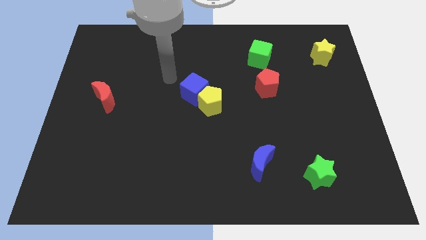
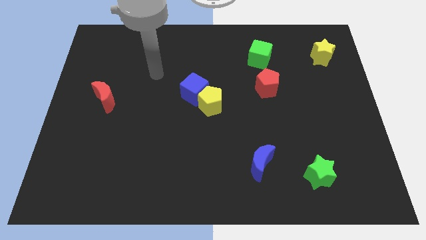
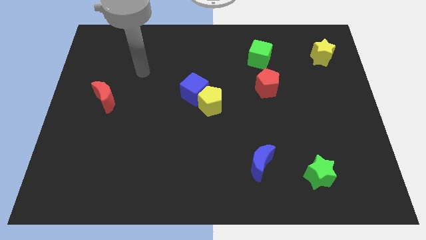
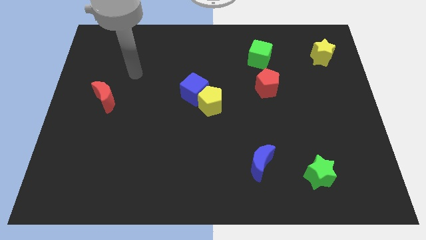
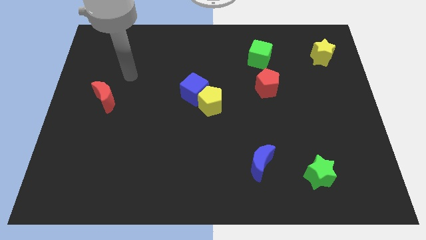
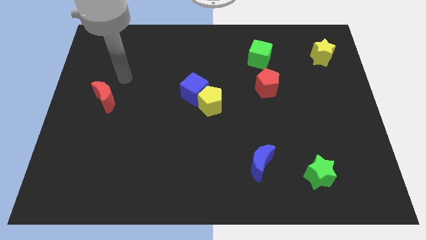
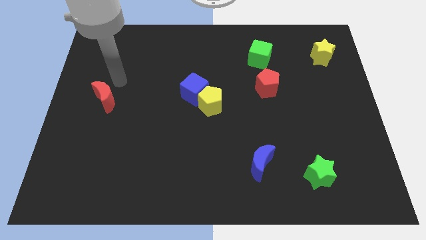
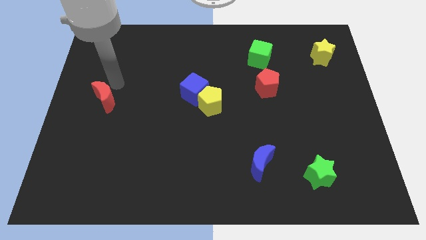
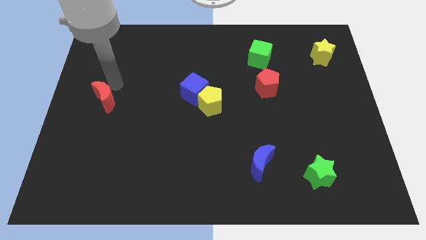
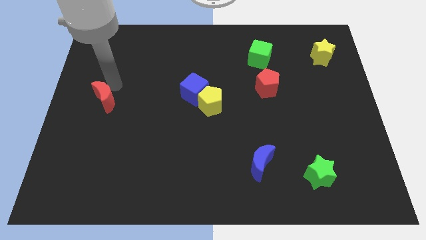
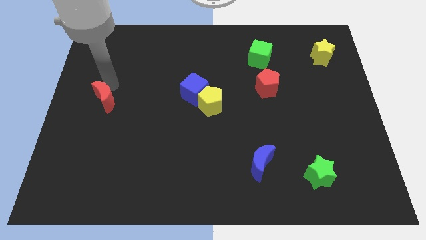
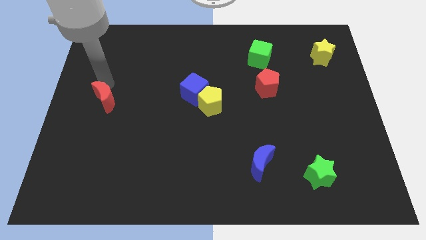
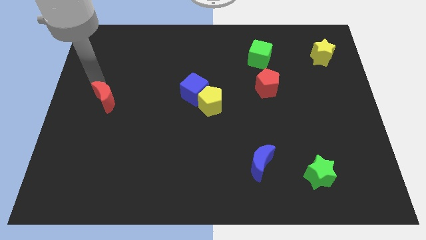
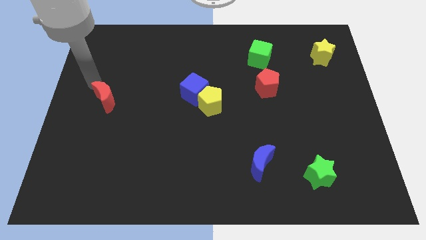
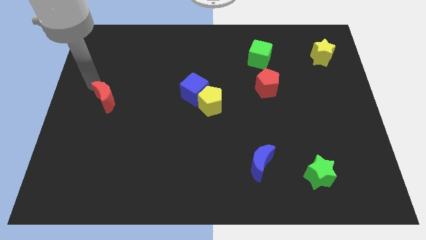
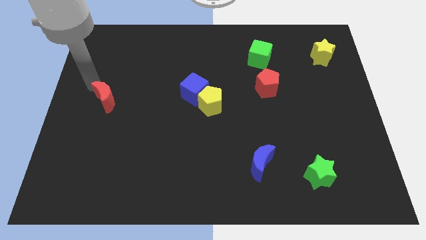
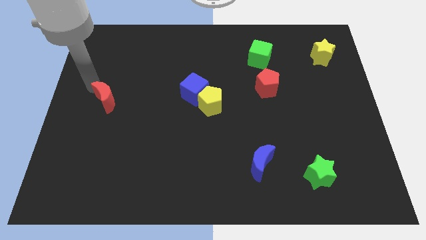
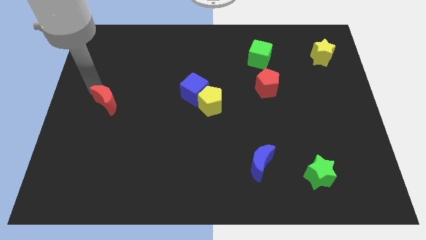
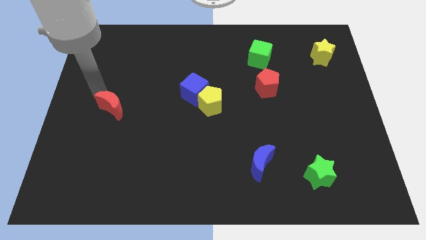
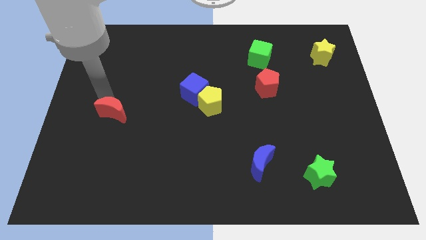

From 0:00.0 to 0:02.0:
push the red crescent slightly downwards

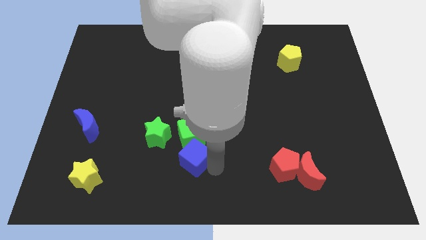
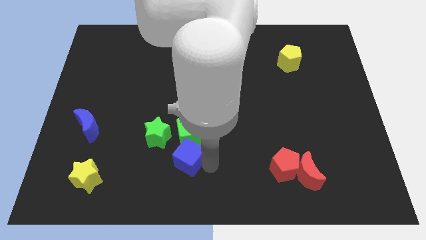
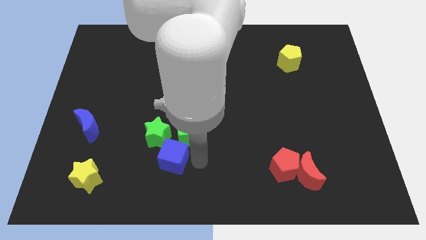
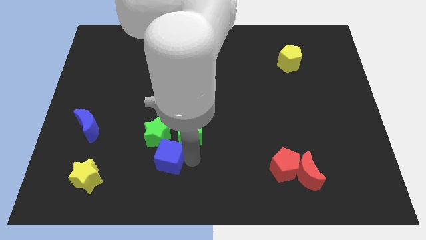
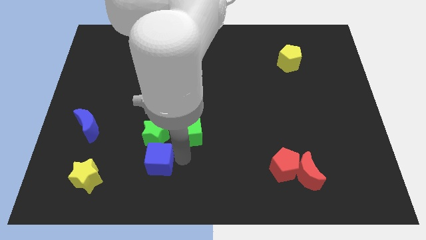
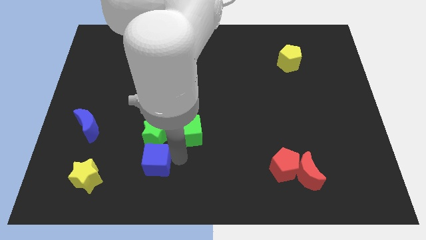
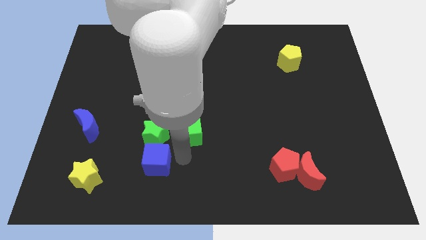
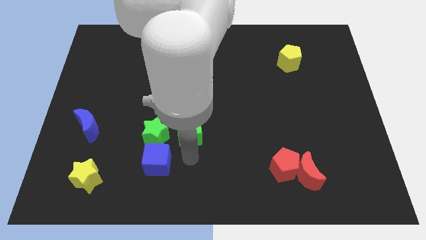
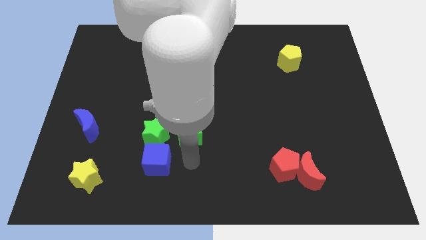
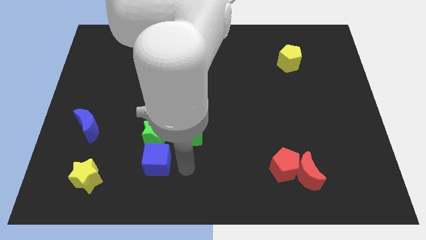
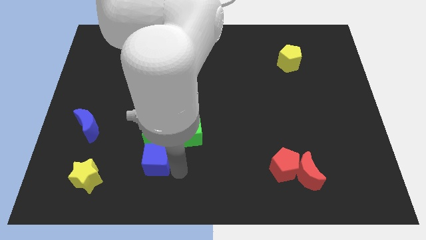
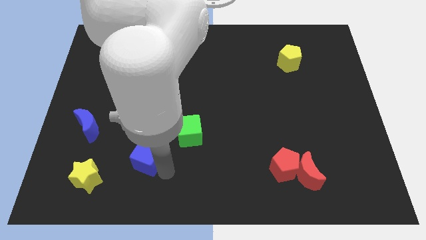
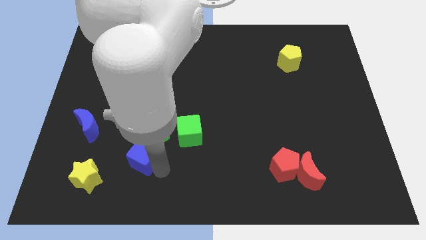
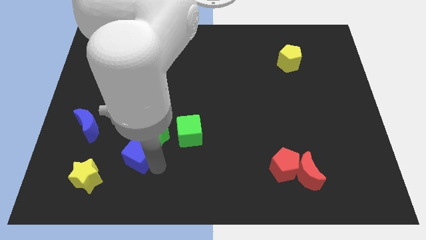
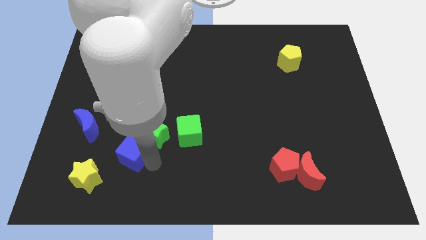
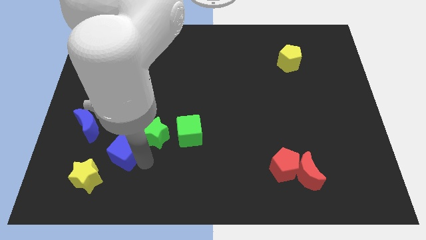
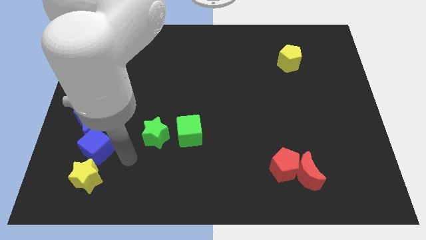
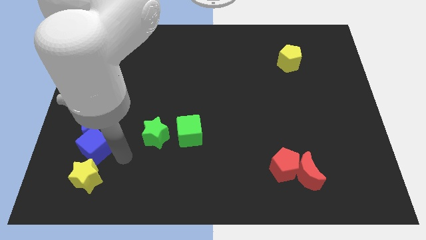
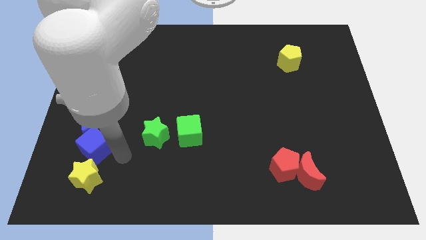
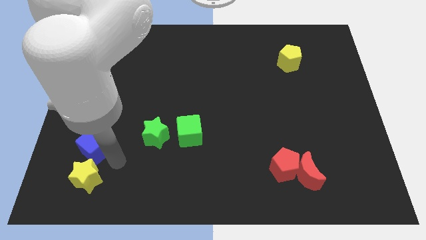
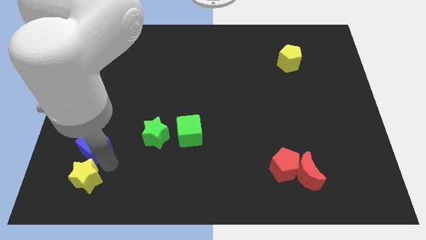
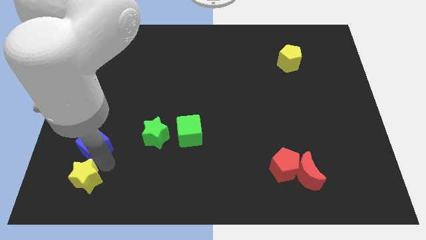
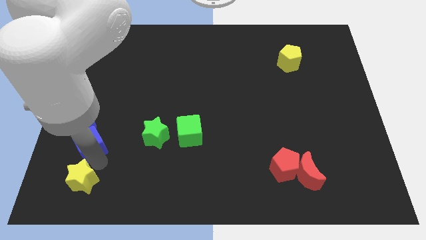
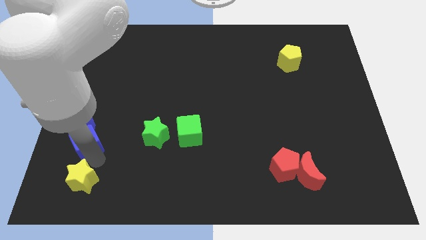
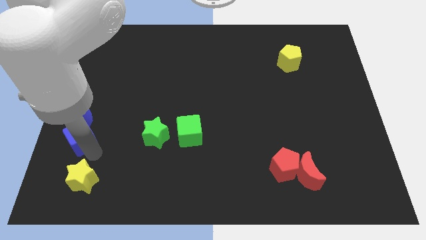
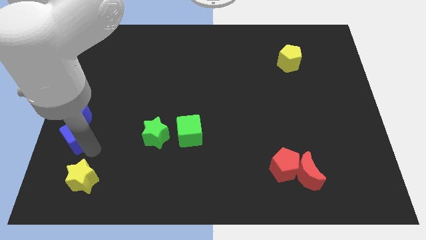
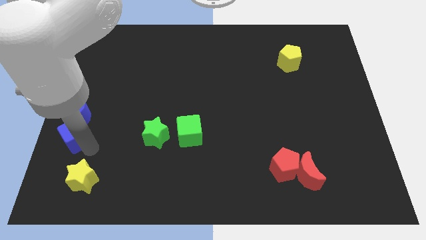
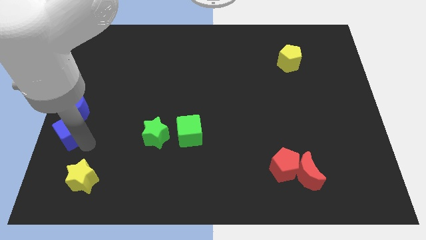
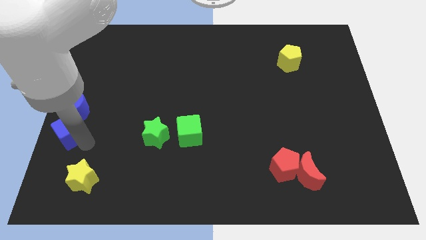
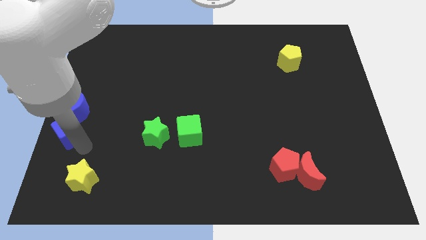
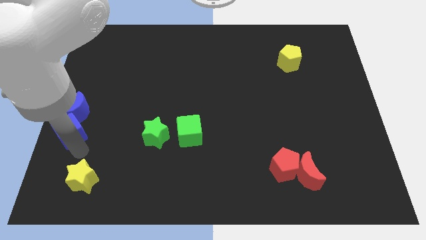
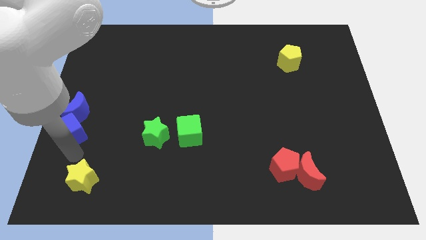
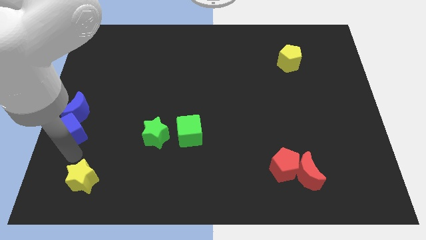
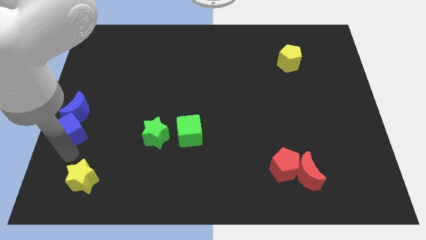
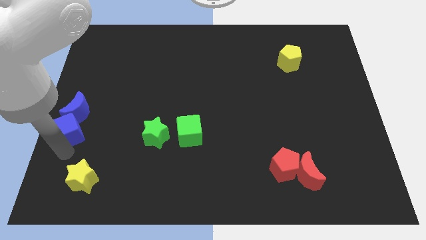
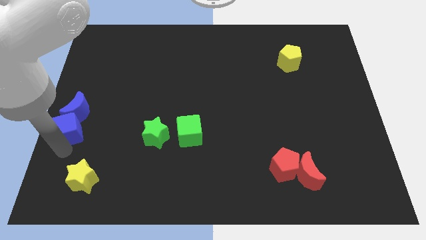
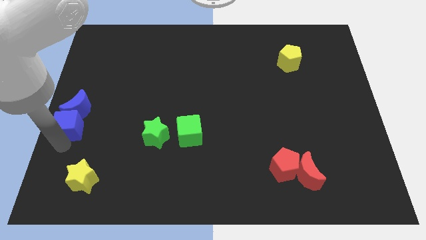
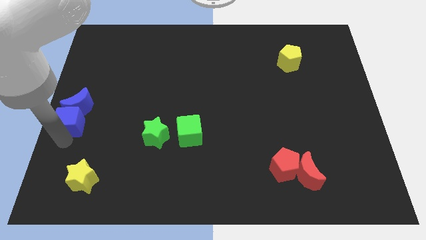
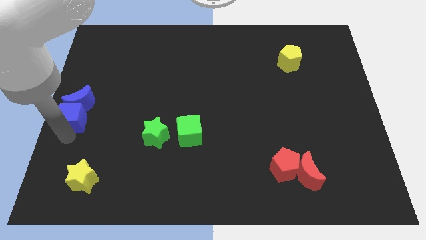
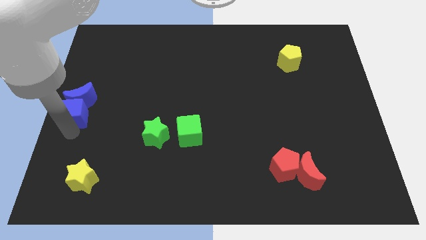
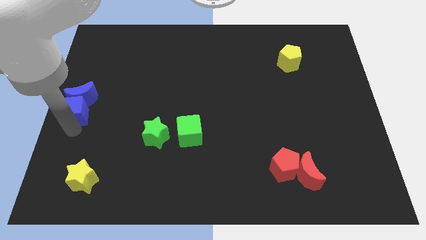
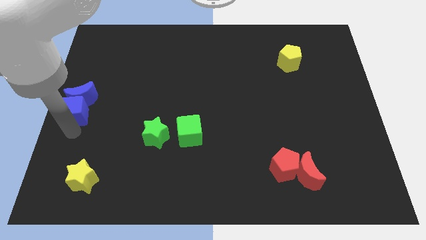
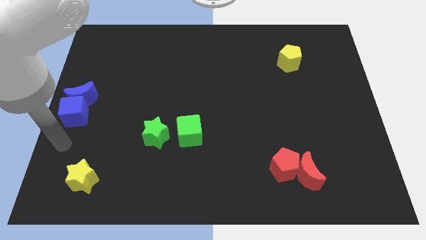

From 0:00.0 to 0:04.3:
slide the blue cube into the blue moon

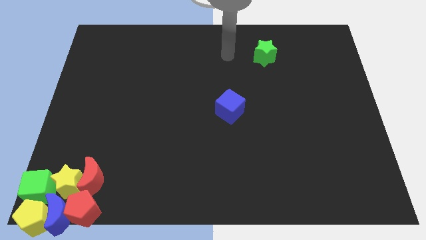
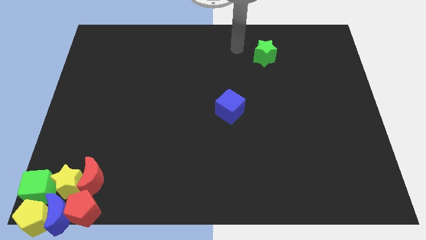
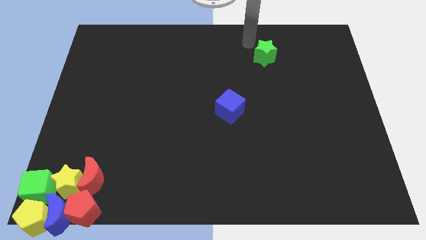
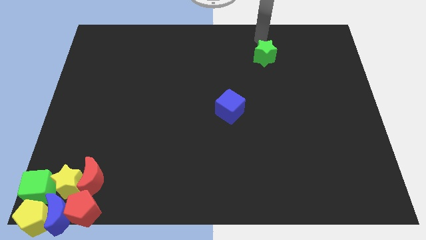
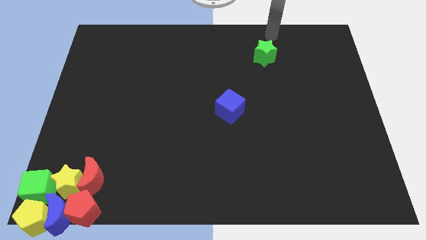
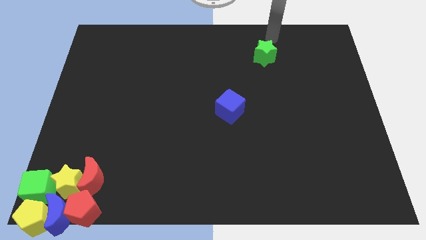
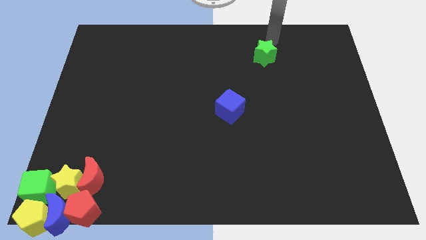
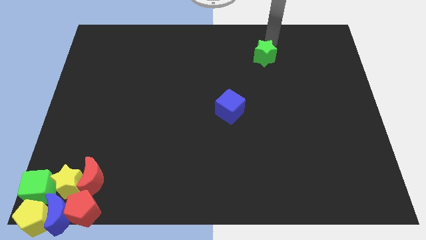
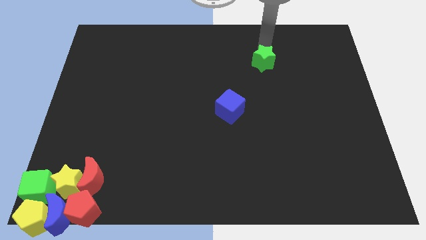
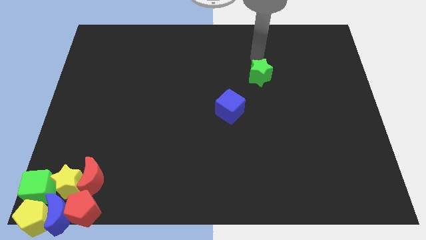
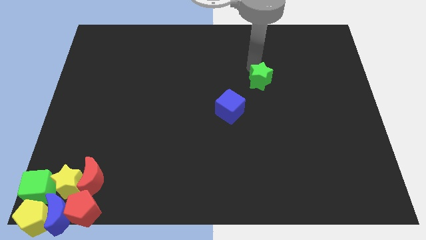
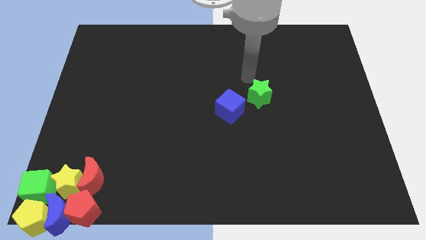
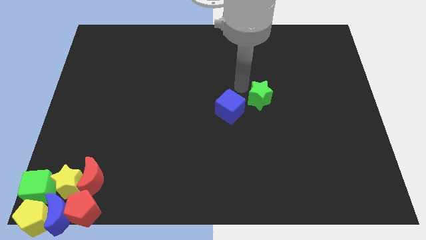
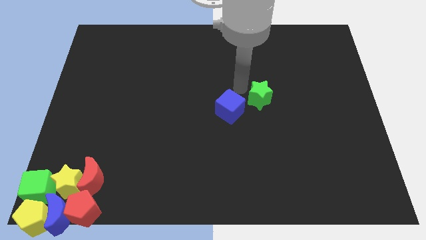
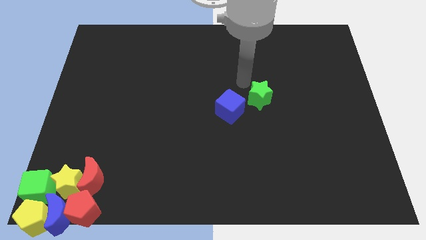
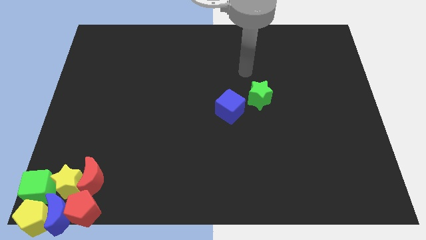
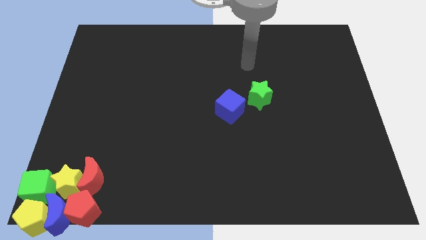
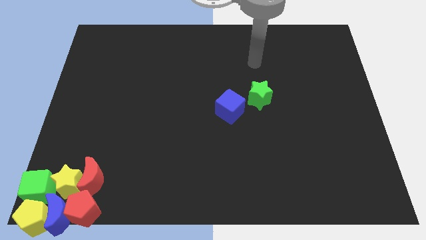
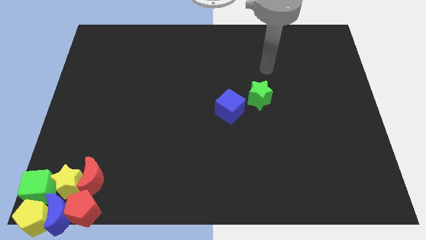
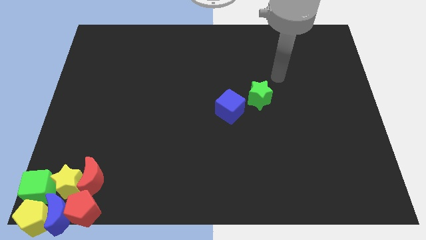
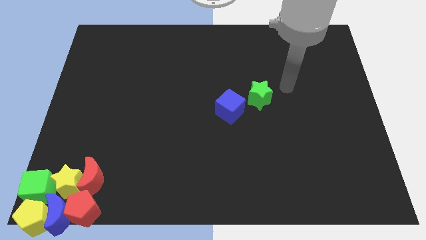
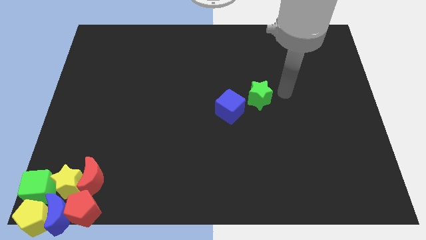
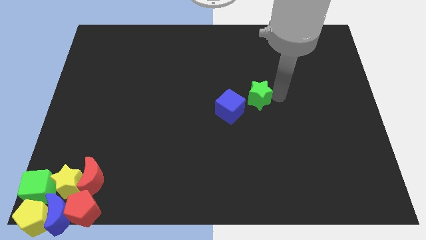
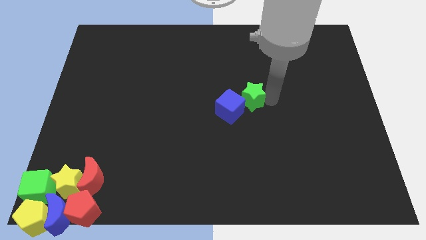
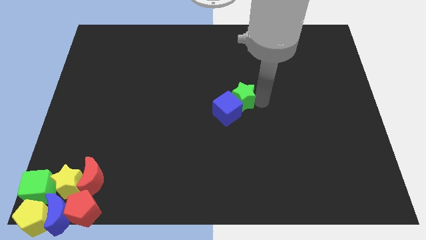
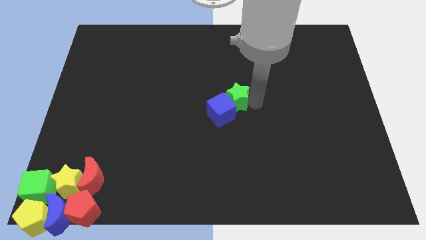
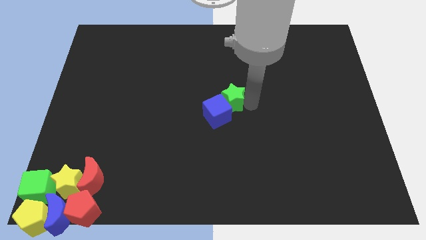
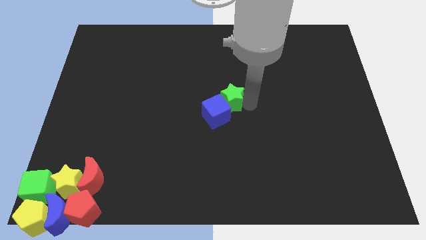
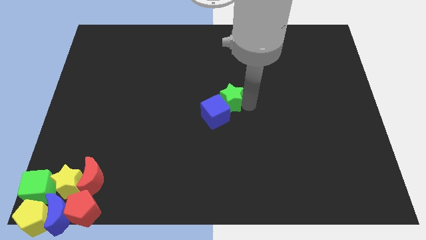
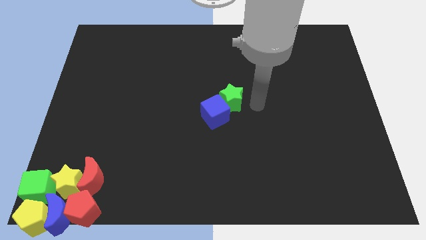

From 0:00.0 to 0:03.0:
move green star into blue cube
